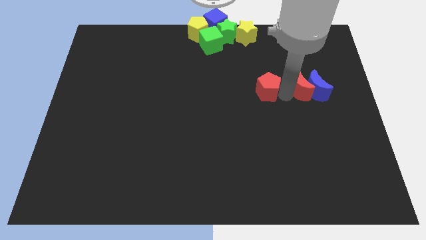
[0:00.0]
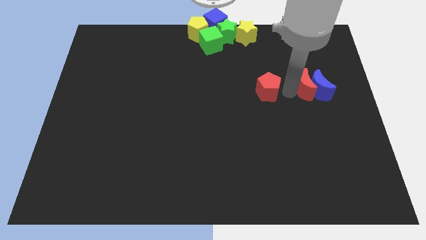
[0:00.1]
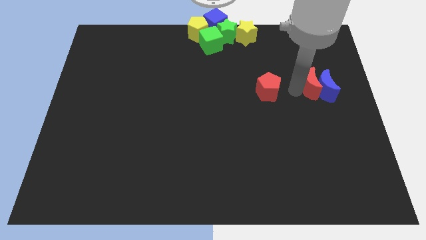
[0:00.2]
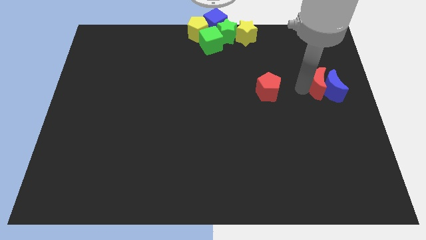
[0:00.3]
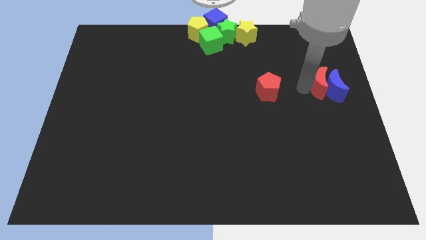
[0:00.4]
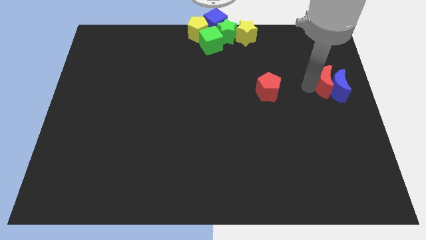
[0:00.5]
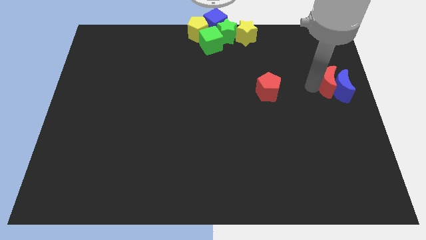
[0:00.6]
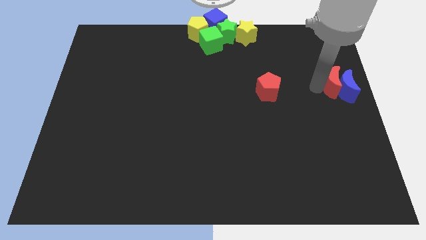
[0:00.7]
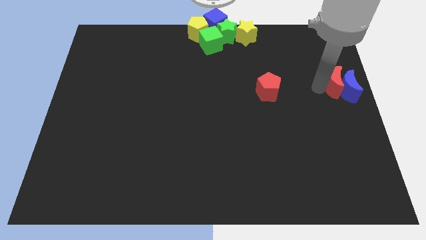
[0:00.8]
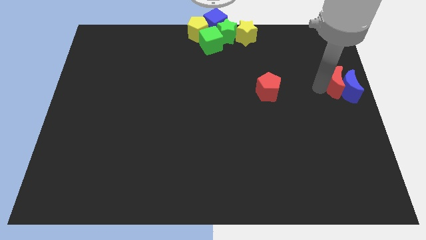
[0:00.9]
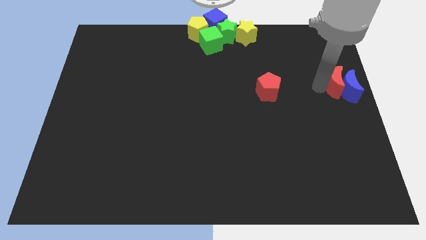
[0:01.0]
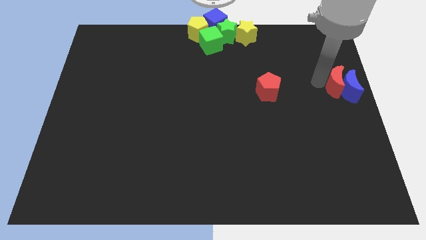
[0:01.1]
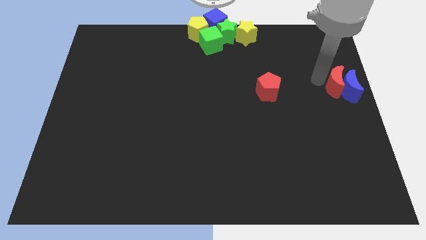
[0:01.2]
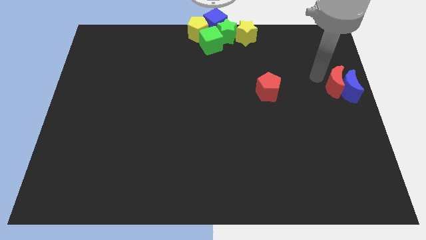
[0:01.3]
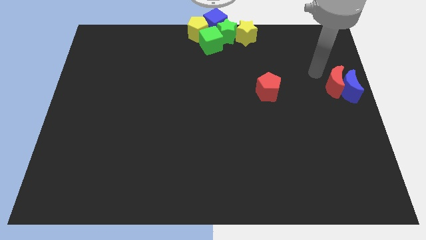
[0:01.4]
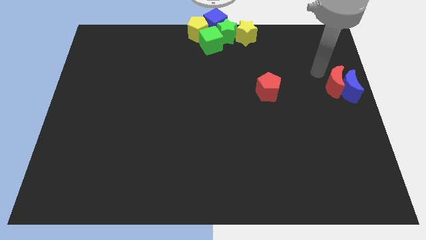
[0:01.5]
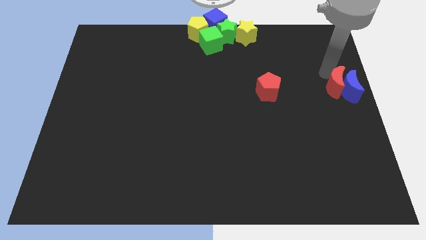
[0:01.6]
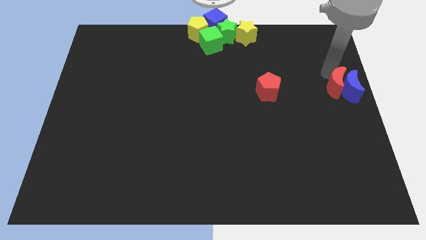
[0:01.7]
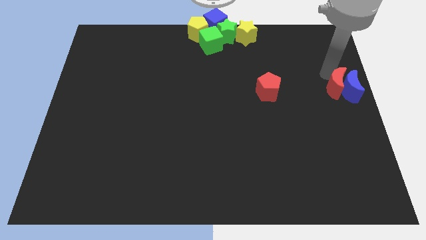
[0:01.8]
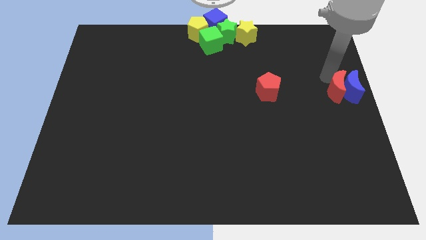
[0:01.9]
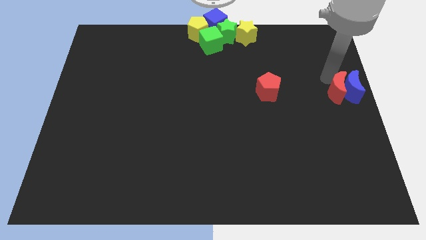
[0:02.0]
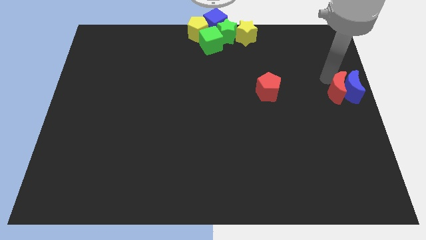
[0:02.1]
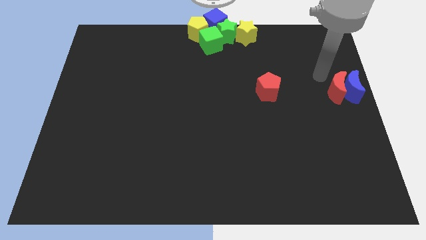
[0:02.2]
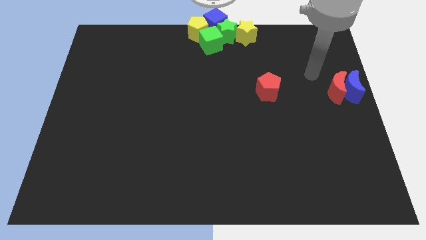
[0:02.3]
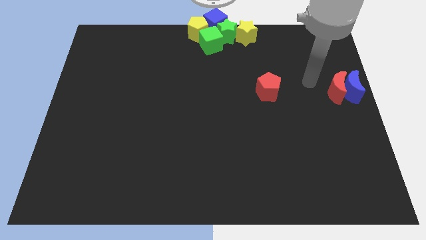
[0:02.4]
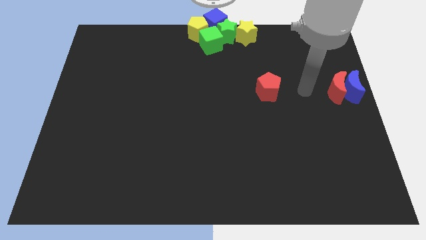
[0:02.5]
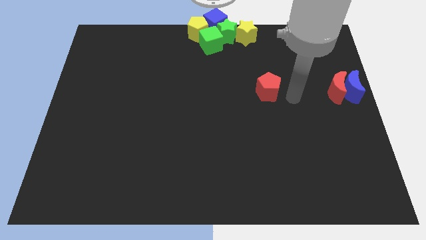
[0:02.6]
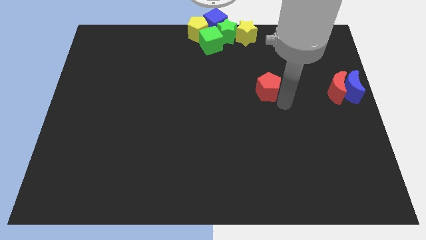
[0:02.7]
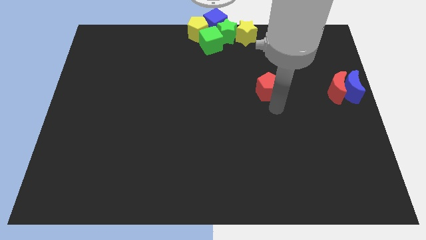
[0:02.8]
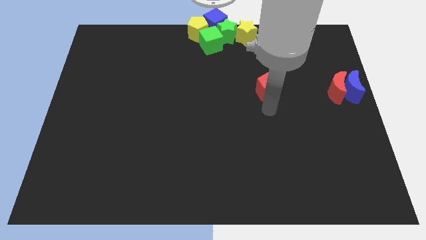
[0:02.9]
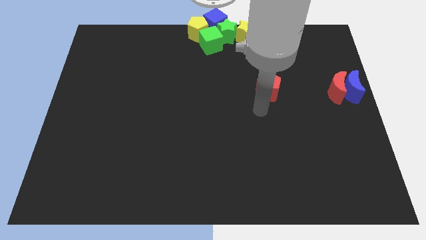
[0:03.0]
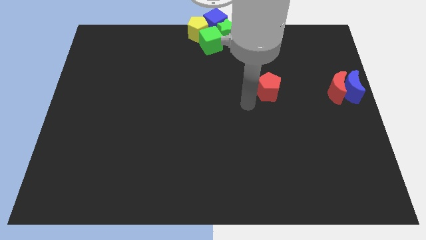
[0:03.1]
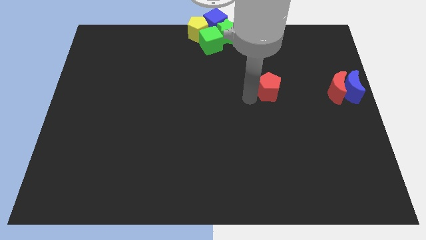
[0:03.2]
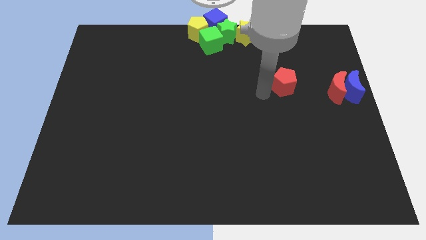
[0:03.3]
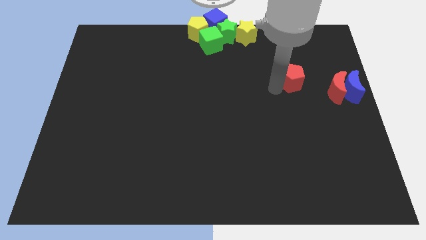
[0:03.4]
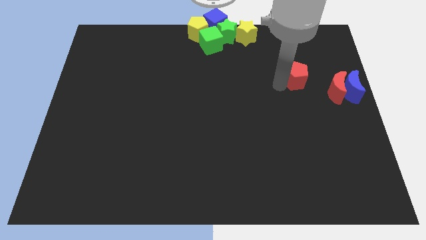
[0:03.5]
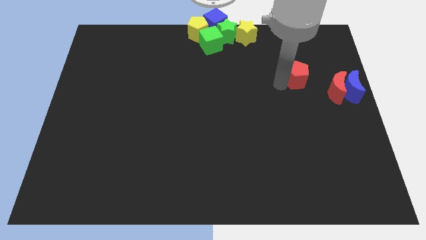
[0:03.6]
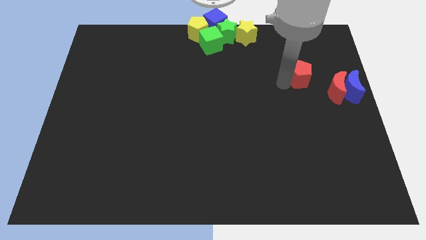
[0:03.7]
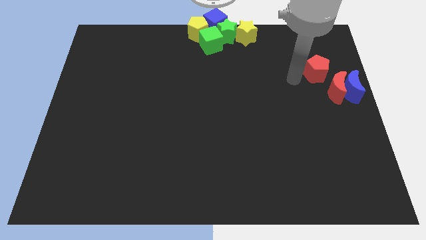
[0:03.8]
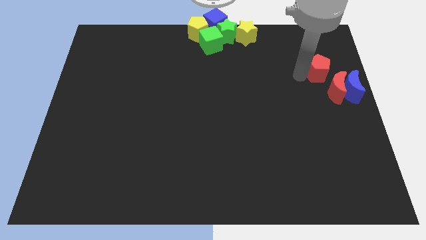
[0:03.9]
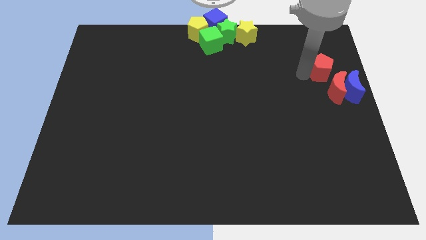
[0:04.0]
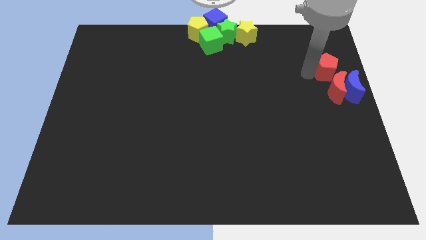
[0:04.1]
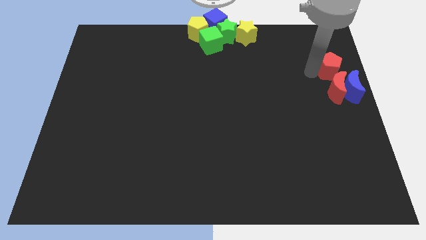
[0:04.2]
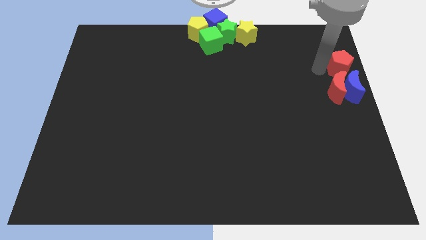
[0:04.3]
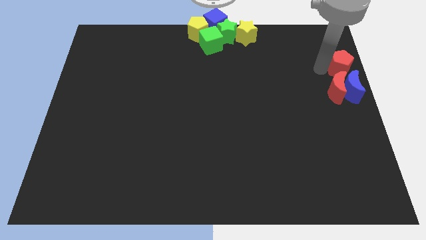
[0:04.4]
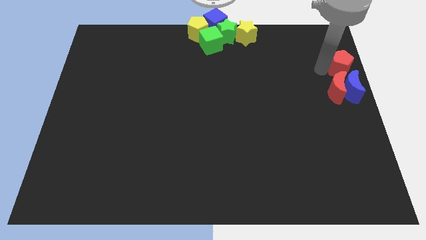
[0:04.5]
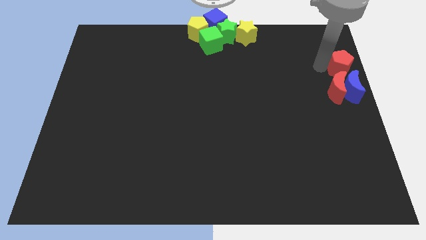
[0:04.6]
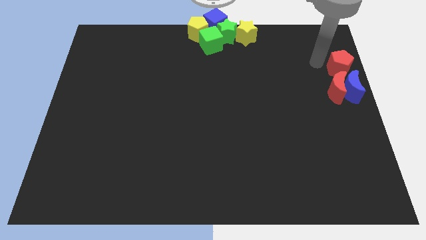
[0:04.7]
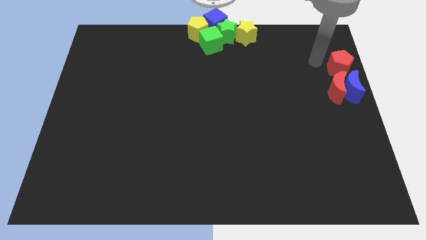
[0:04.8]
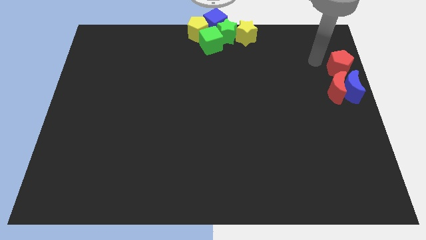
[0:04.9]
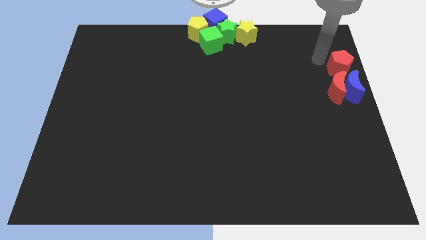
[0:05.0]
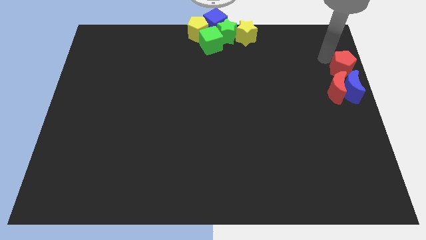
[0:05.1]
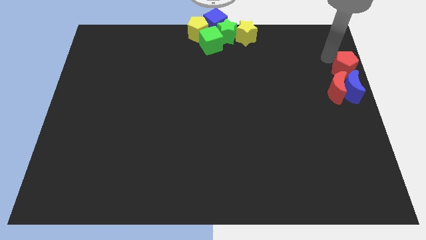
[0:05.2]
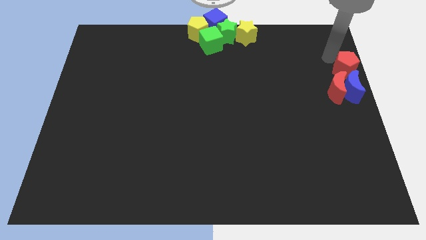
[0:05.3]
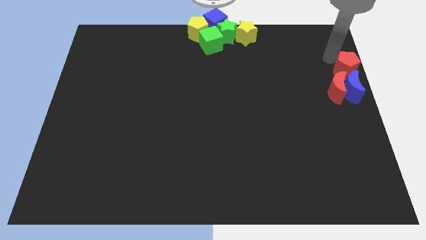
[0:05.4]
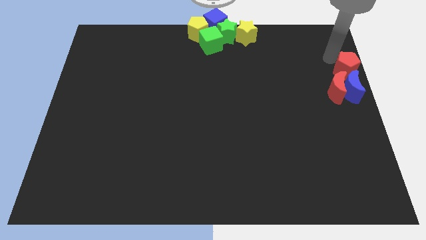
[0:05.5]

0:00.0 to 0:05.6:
drag both moons and red pentagon towards middle right of the board

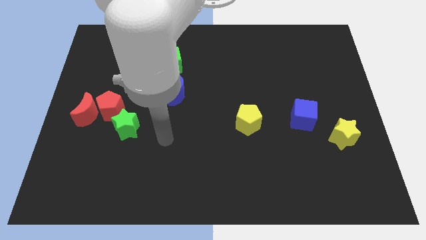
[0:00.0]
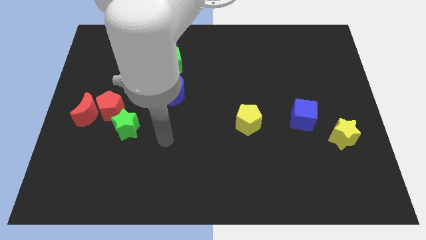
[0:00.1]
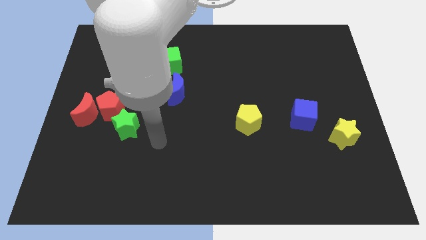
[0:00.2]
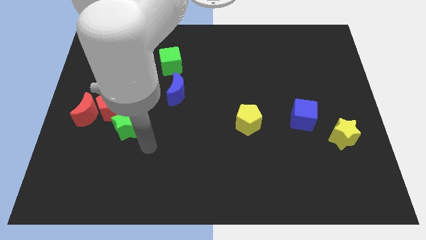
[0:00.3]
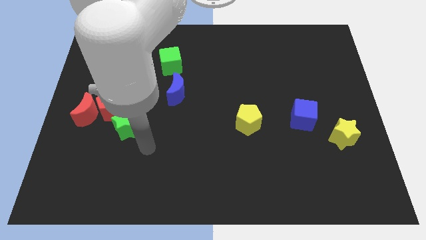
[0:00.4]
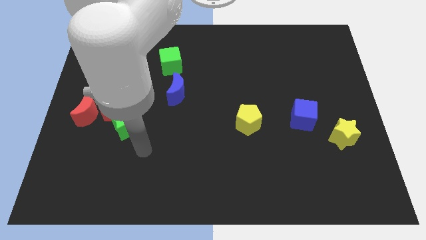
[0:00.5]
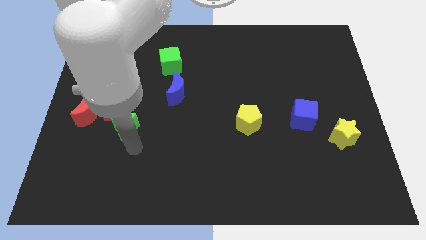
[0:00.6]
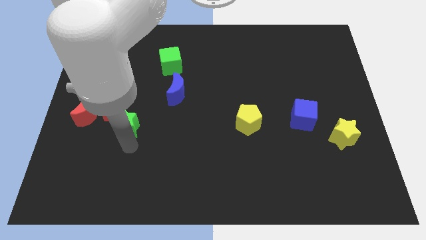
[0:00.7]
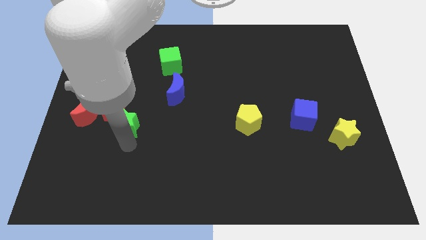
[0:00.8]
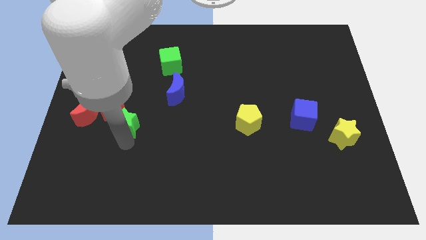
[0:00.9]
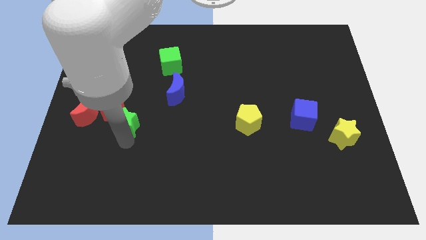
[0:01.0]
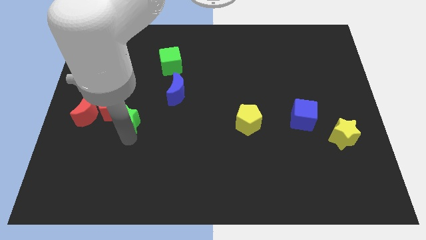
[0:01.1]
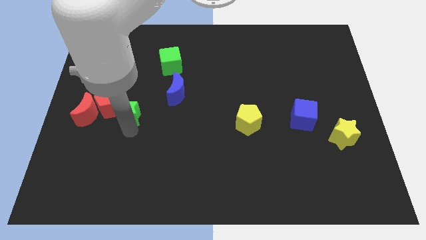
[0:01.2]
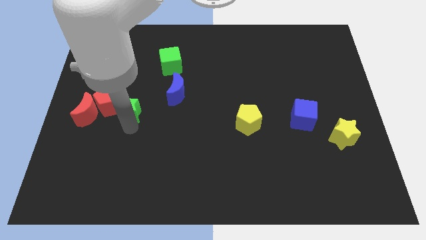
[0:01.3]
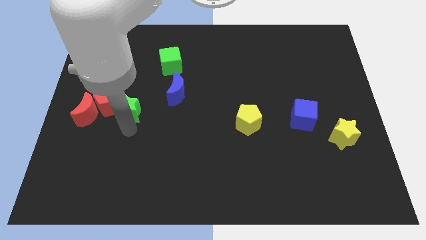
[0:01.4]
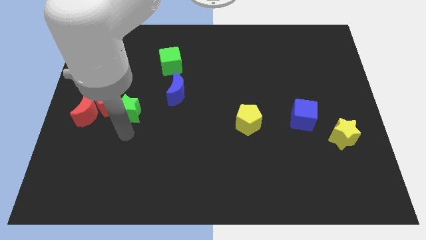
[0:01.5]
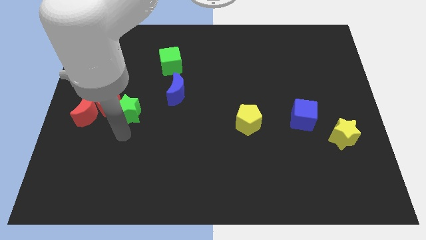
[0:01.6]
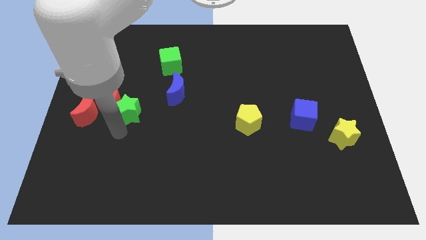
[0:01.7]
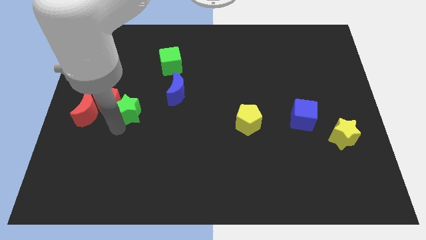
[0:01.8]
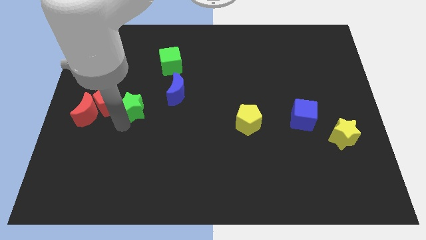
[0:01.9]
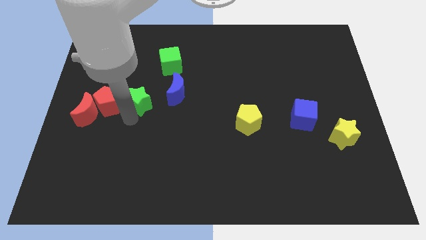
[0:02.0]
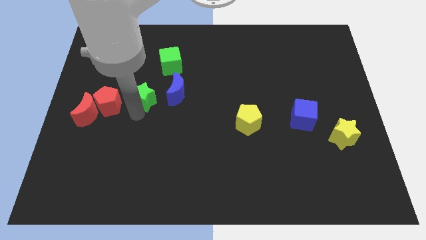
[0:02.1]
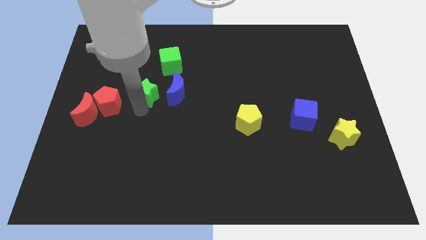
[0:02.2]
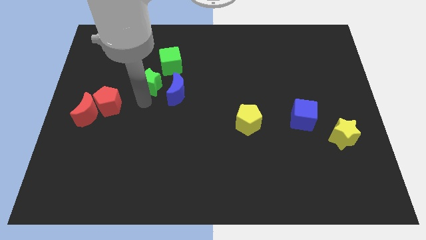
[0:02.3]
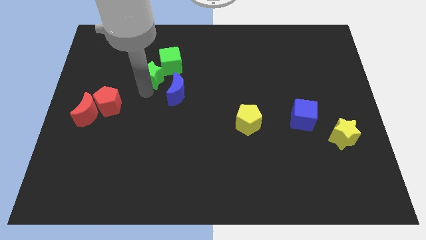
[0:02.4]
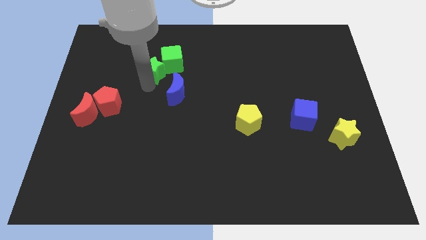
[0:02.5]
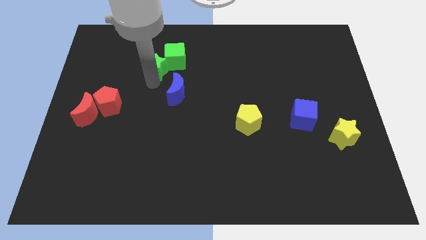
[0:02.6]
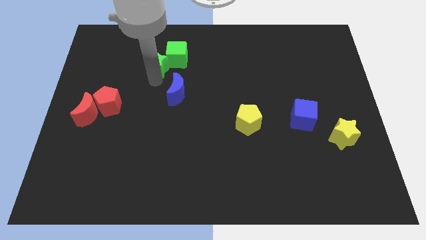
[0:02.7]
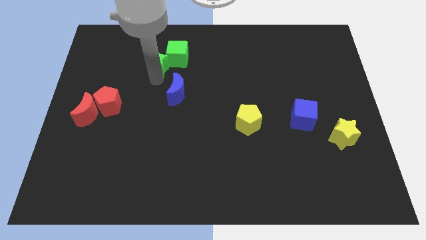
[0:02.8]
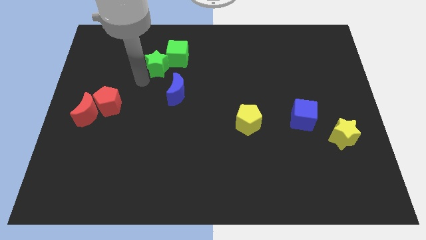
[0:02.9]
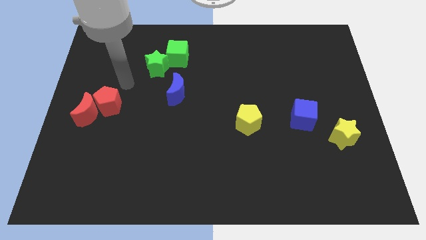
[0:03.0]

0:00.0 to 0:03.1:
separate green star from red pentagon

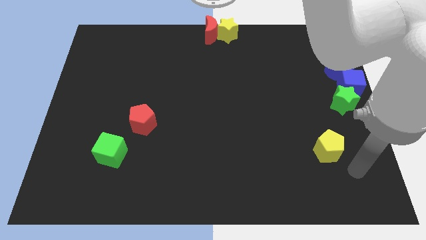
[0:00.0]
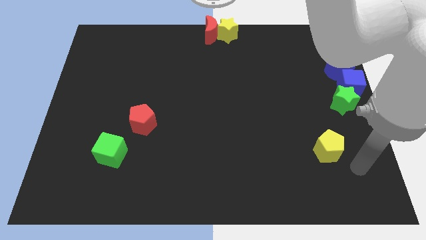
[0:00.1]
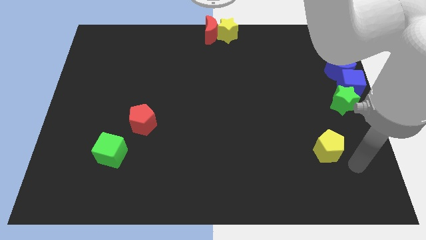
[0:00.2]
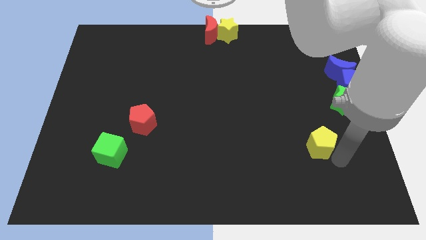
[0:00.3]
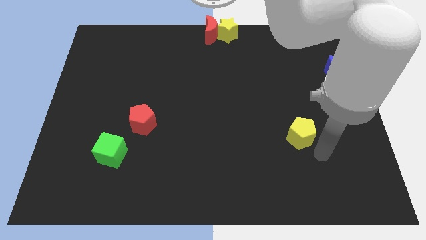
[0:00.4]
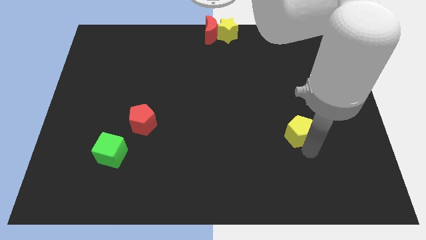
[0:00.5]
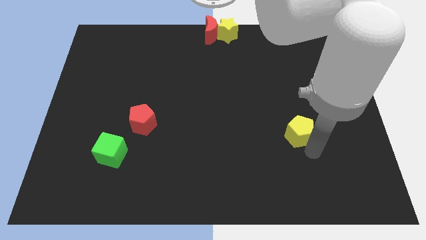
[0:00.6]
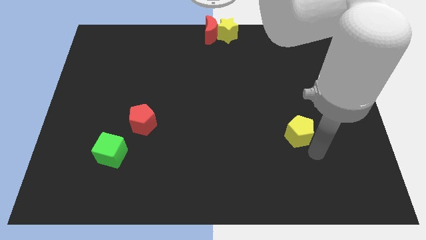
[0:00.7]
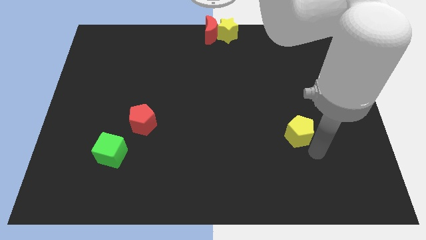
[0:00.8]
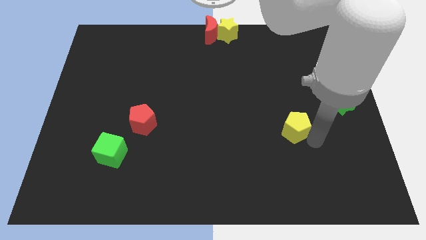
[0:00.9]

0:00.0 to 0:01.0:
push the yellow pentagon towards the center of the board
